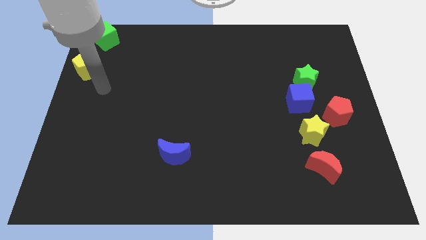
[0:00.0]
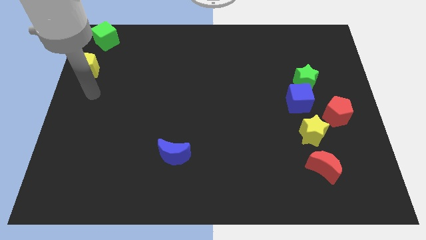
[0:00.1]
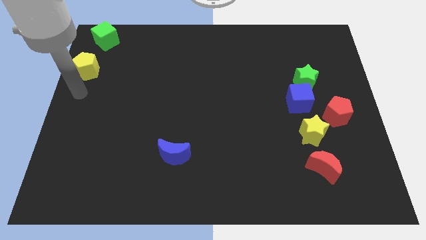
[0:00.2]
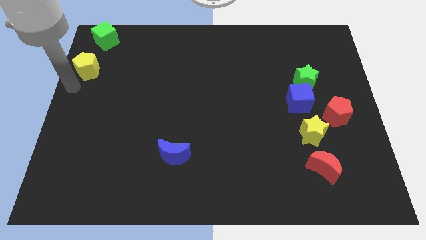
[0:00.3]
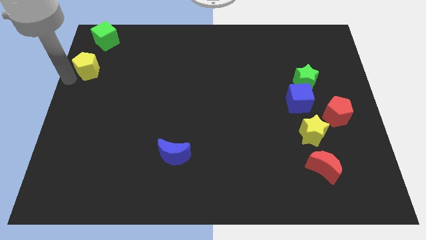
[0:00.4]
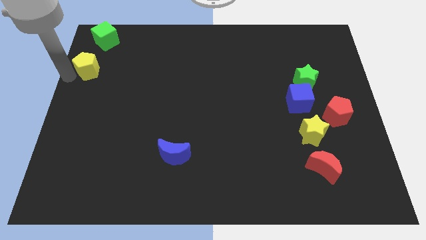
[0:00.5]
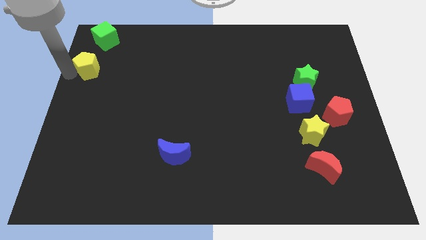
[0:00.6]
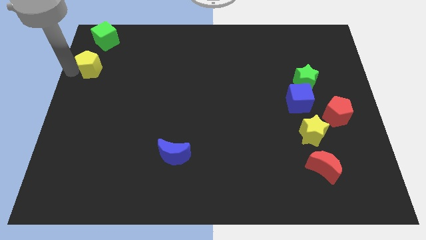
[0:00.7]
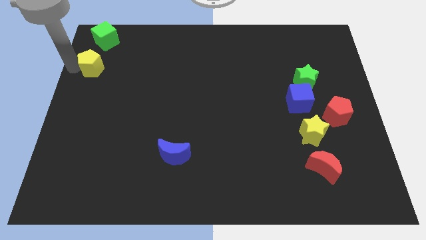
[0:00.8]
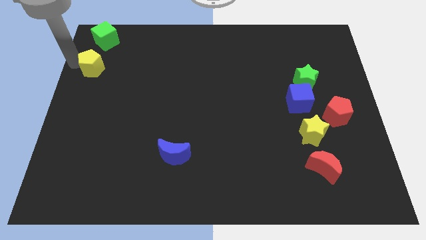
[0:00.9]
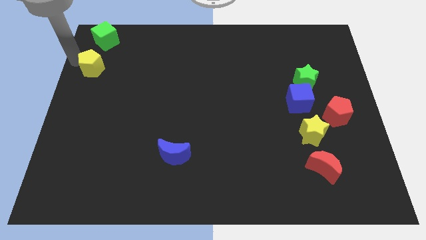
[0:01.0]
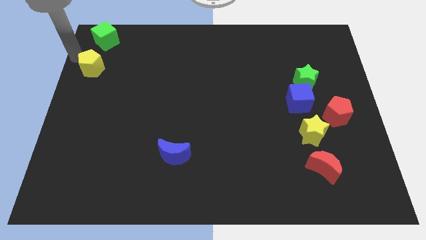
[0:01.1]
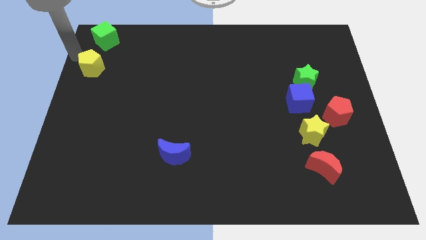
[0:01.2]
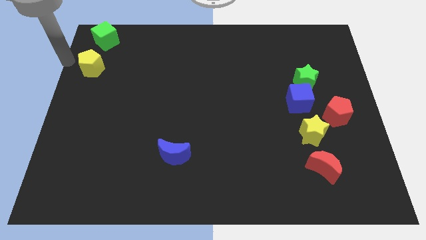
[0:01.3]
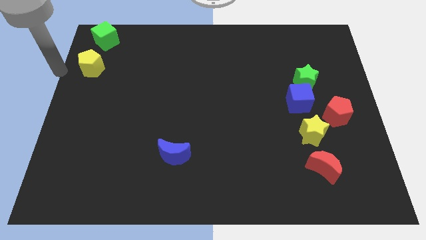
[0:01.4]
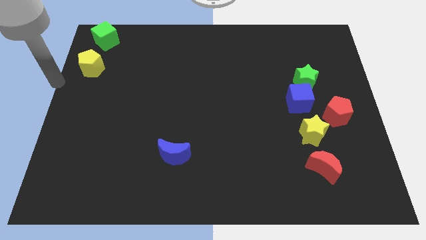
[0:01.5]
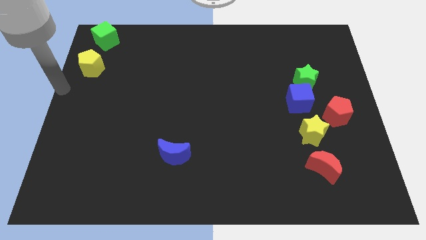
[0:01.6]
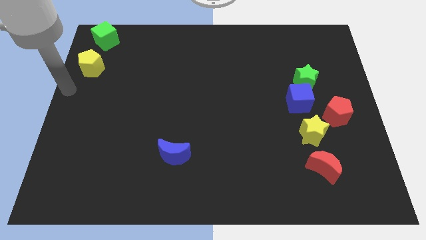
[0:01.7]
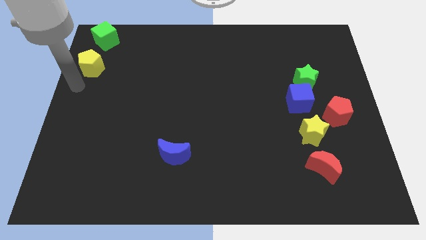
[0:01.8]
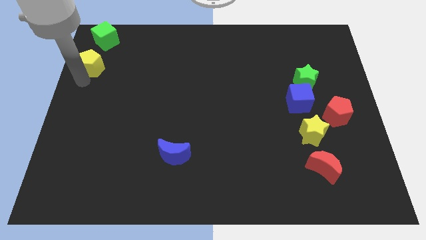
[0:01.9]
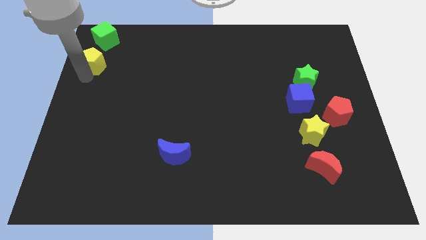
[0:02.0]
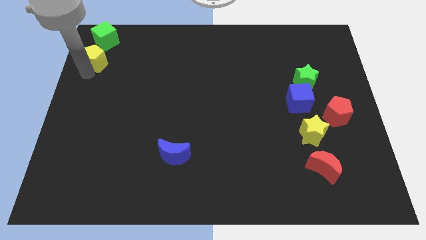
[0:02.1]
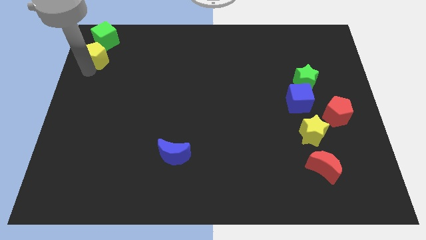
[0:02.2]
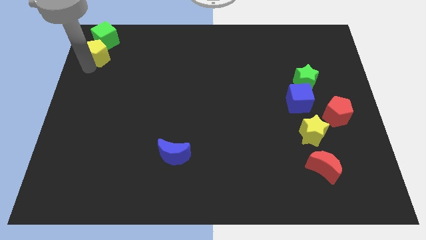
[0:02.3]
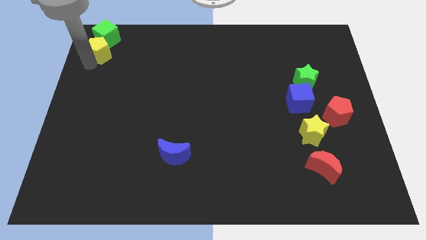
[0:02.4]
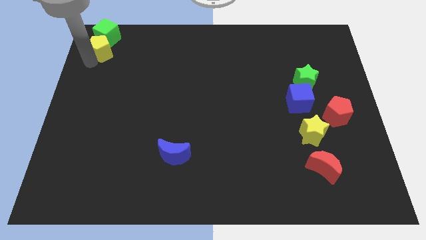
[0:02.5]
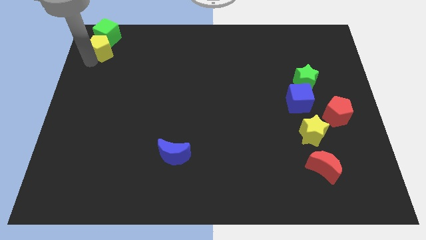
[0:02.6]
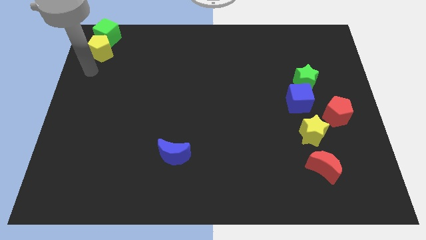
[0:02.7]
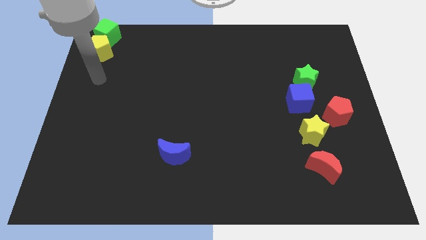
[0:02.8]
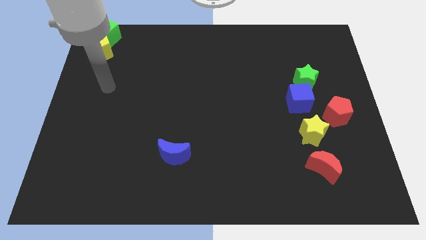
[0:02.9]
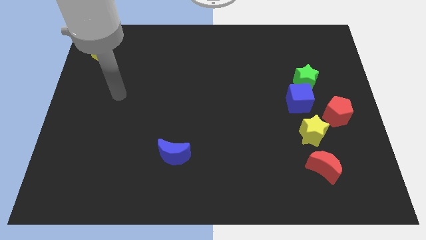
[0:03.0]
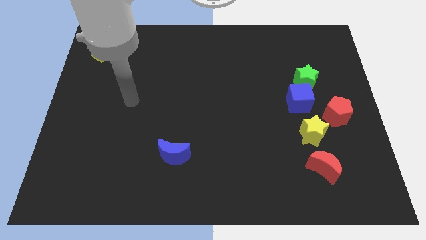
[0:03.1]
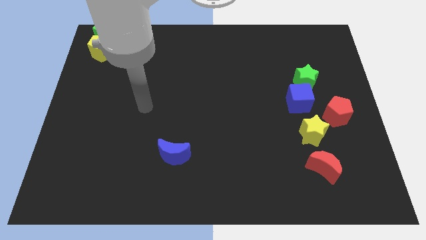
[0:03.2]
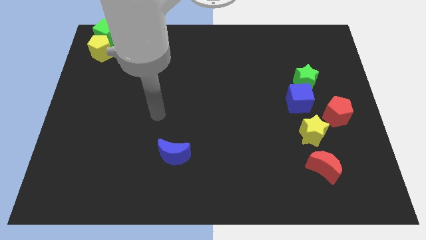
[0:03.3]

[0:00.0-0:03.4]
push the yellow pentagon into the green cube

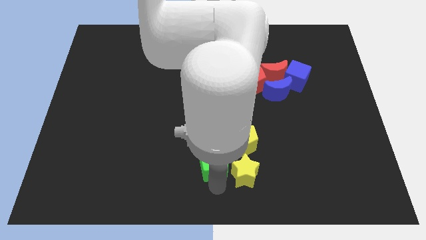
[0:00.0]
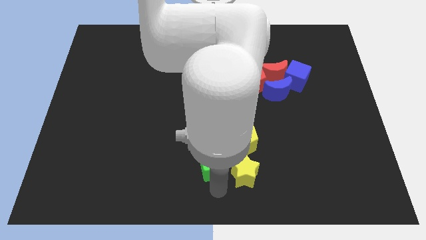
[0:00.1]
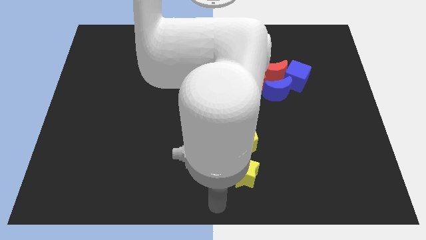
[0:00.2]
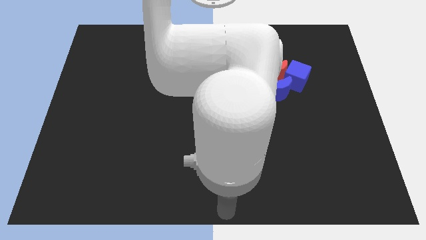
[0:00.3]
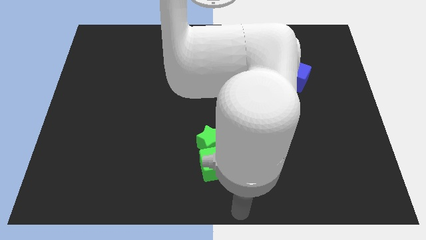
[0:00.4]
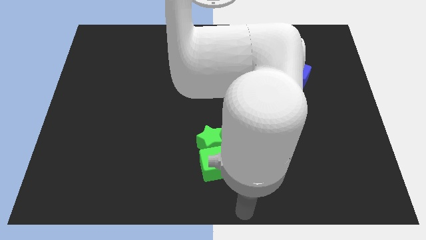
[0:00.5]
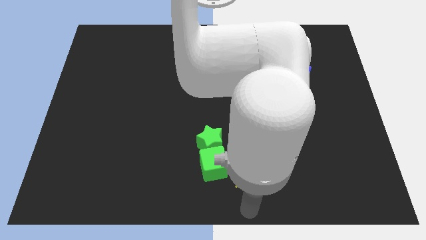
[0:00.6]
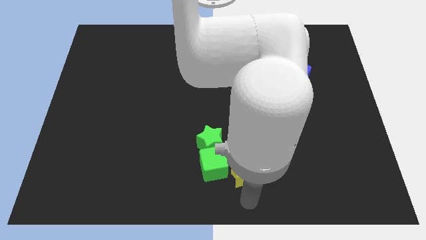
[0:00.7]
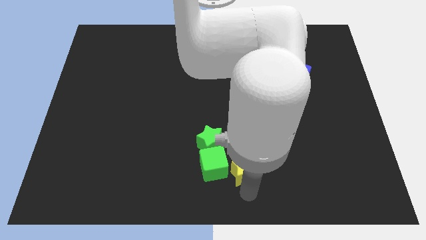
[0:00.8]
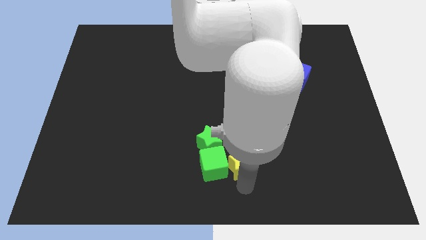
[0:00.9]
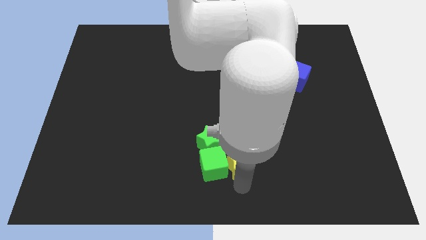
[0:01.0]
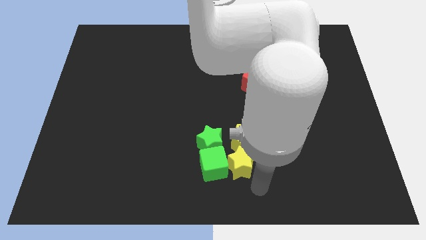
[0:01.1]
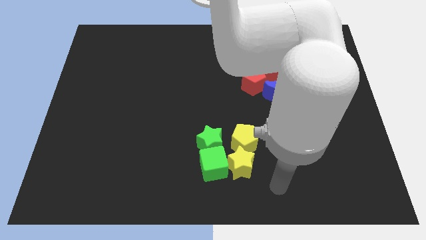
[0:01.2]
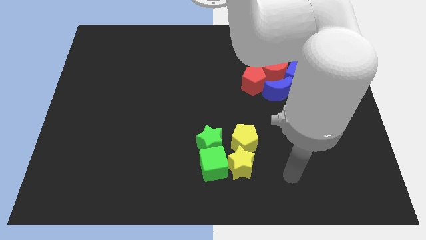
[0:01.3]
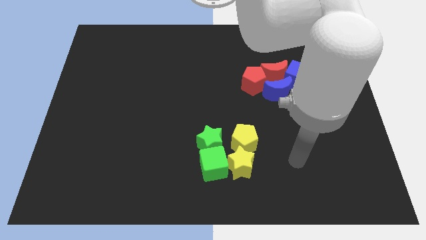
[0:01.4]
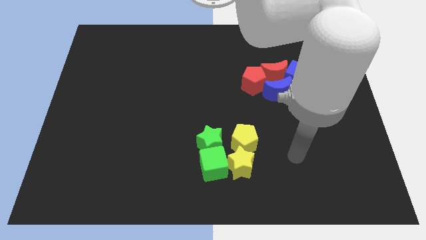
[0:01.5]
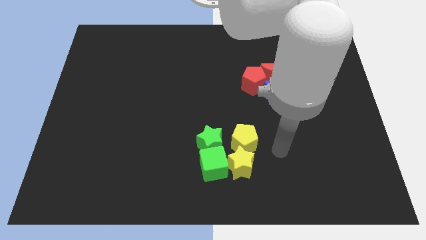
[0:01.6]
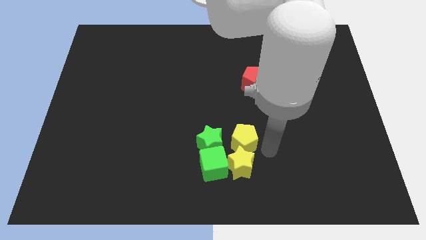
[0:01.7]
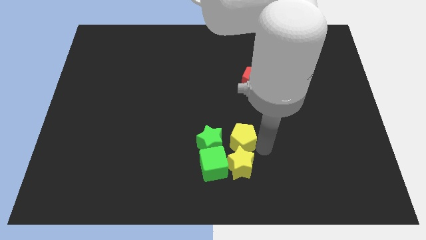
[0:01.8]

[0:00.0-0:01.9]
slightly push the yellow star

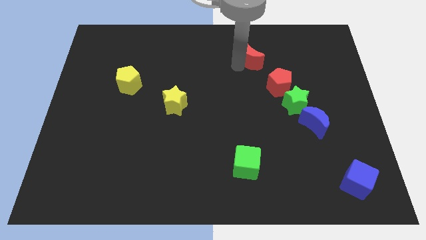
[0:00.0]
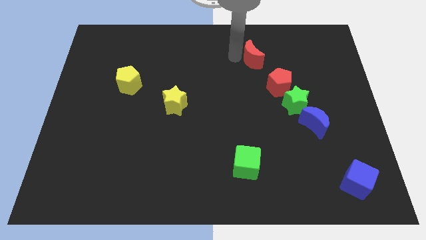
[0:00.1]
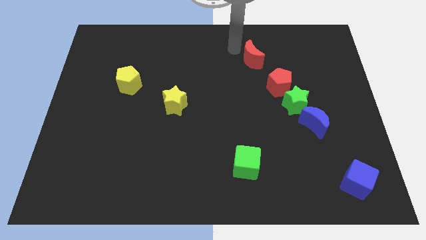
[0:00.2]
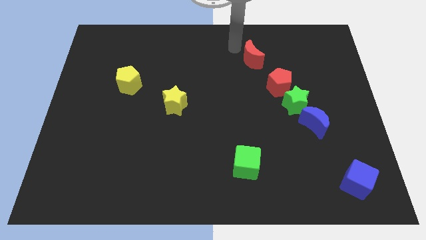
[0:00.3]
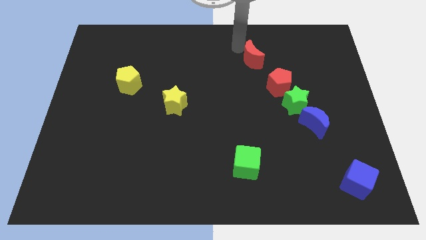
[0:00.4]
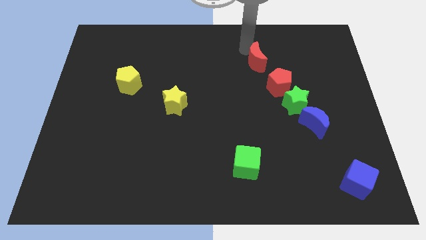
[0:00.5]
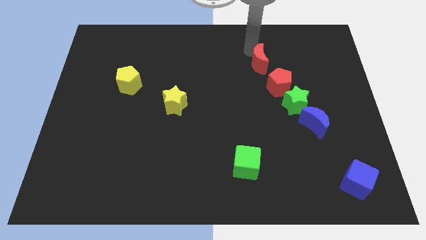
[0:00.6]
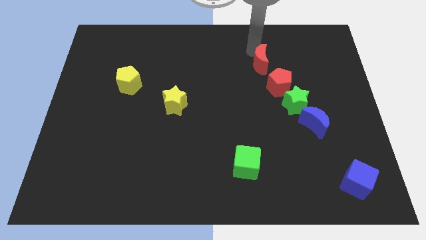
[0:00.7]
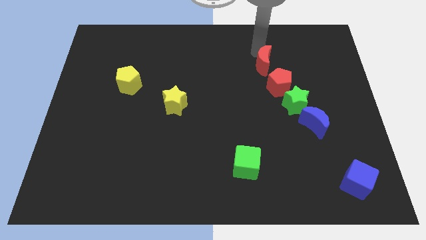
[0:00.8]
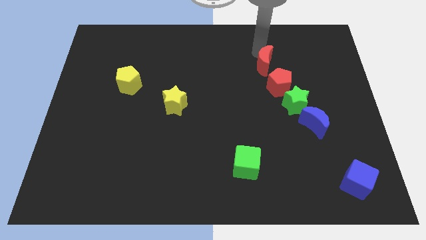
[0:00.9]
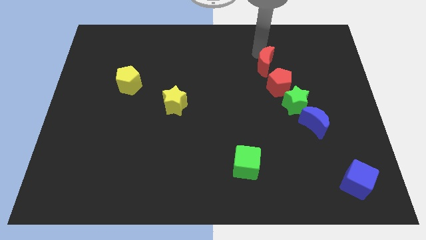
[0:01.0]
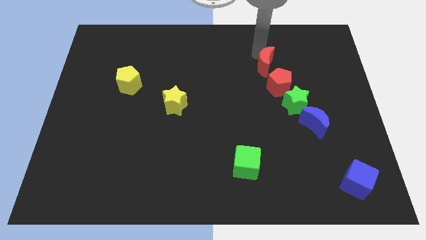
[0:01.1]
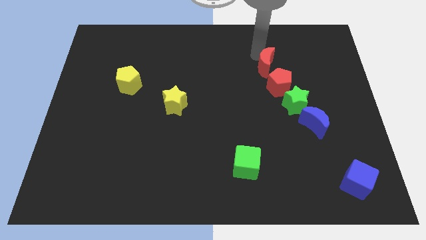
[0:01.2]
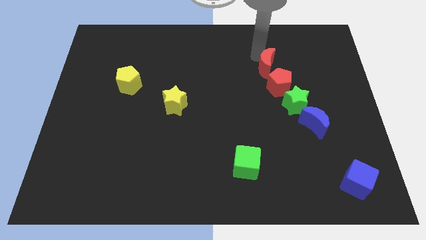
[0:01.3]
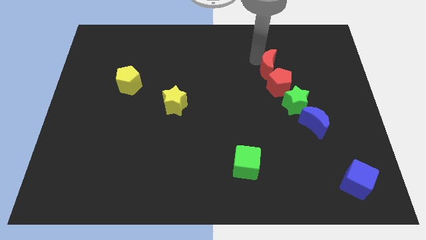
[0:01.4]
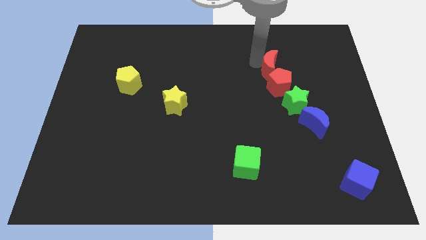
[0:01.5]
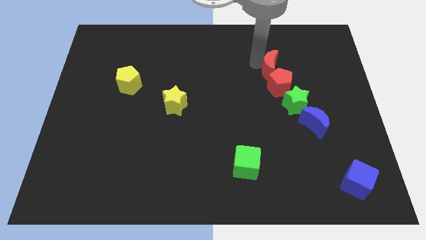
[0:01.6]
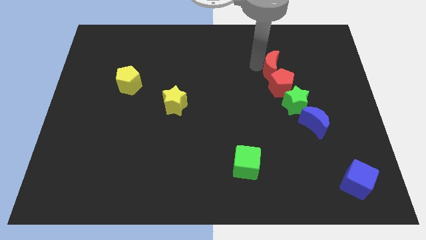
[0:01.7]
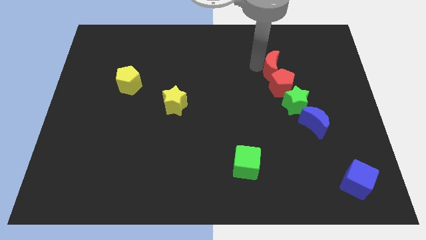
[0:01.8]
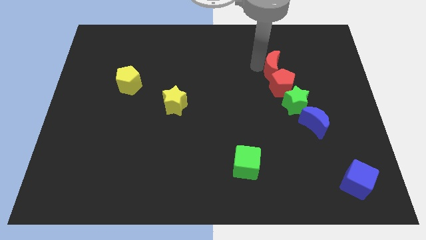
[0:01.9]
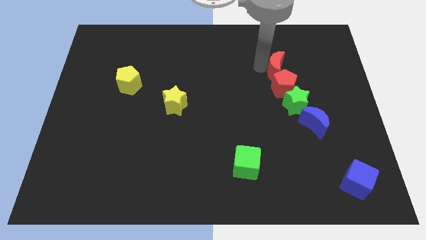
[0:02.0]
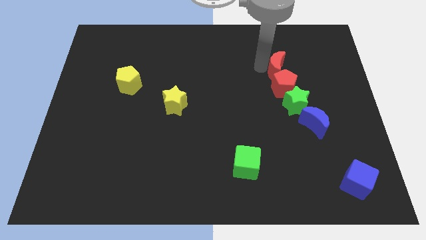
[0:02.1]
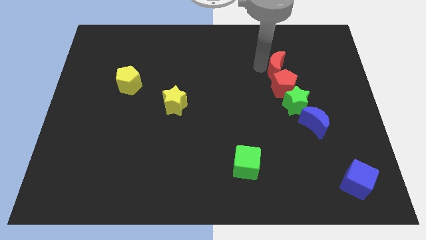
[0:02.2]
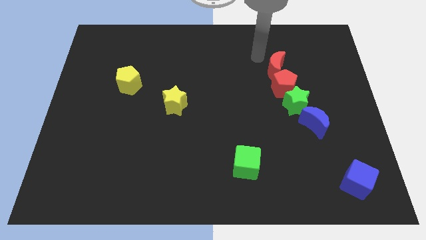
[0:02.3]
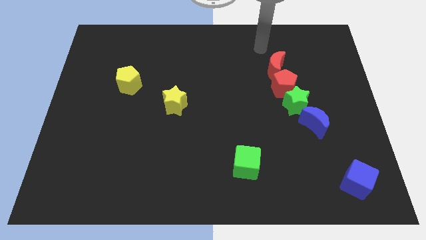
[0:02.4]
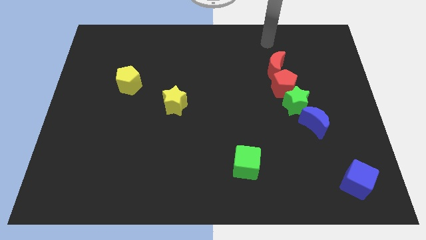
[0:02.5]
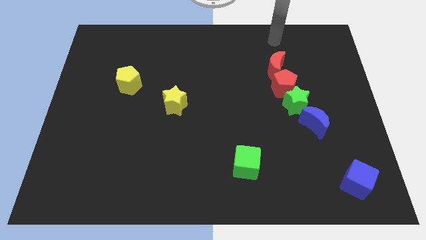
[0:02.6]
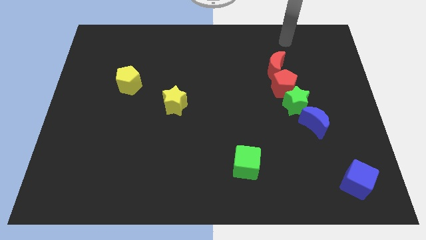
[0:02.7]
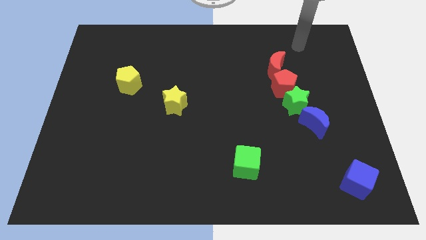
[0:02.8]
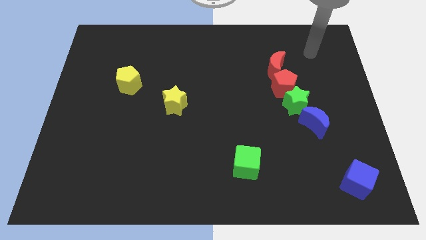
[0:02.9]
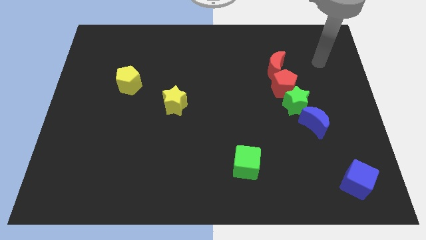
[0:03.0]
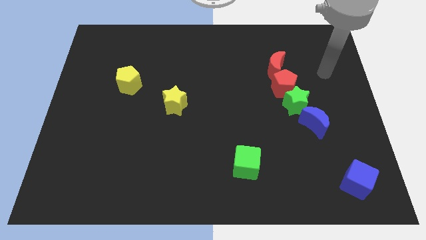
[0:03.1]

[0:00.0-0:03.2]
push the red crescent into the top left side of the red pentagon

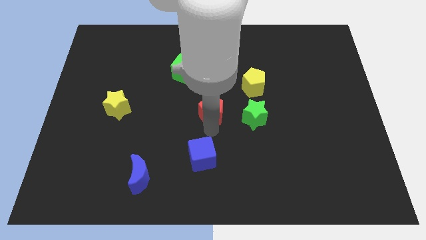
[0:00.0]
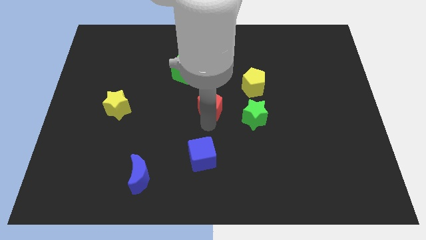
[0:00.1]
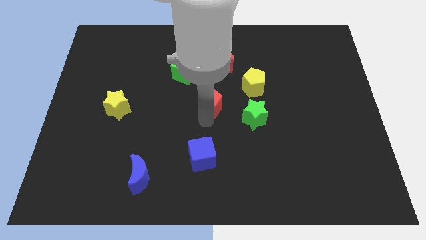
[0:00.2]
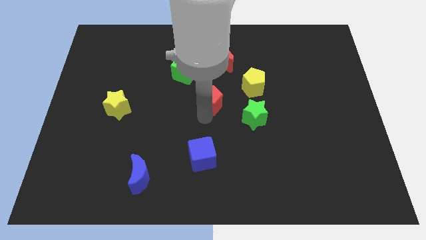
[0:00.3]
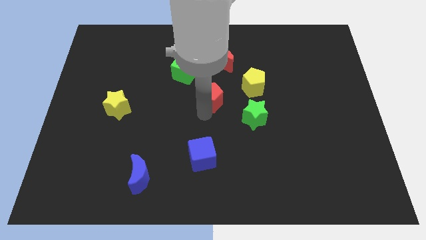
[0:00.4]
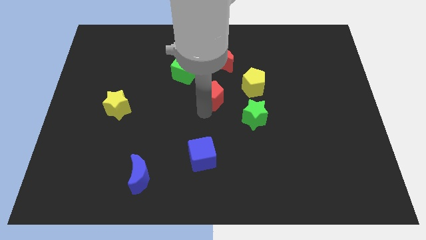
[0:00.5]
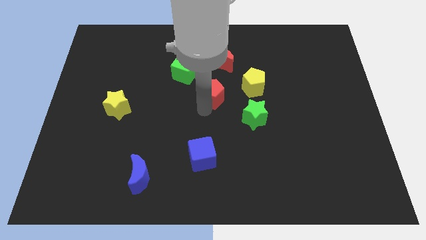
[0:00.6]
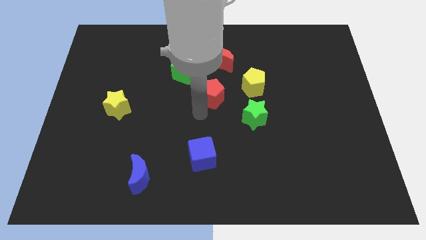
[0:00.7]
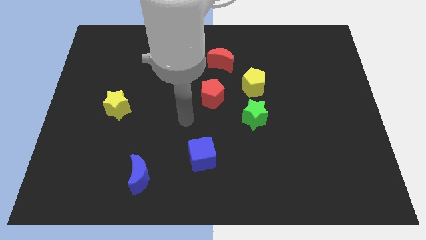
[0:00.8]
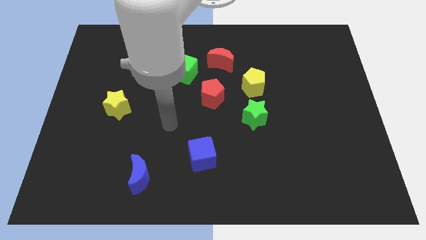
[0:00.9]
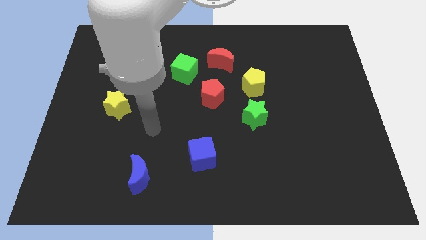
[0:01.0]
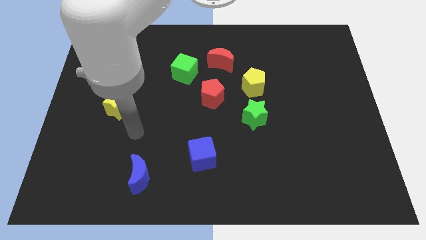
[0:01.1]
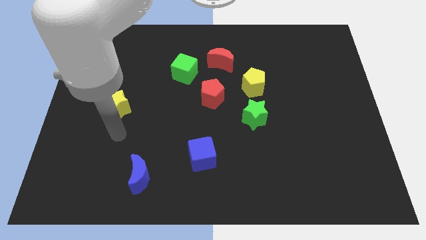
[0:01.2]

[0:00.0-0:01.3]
push the red pentagon vertically bottom to the red crescent
